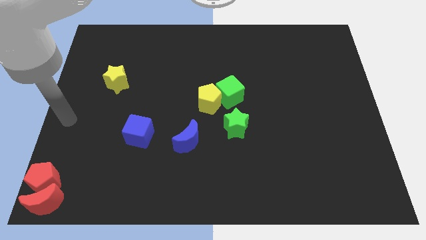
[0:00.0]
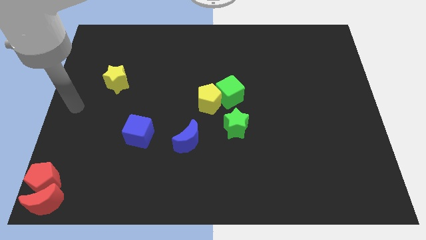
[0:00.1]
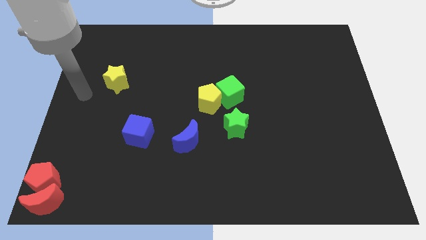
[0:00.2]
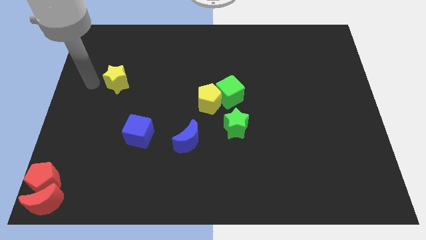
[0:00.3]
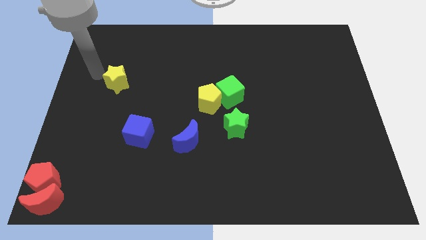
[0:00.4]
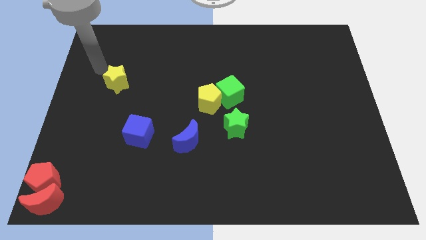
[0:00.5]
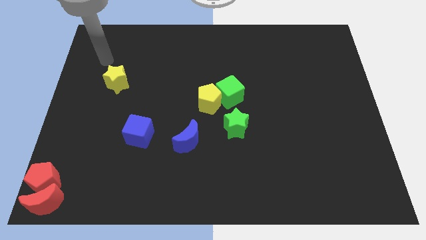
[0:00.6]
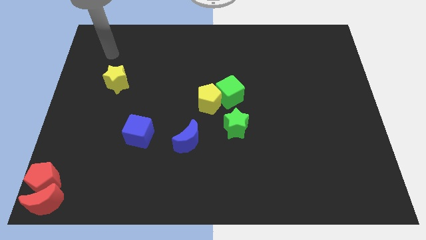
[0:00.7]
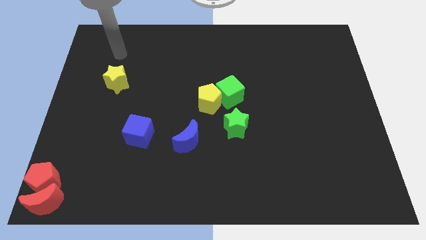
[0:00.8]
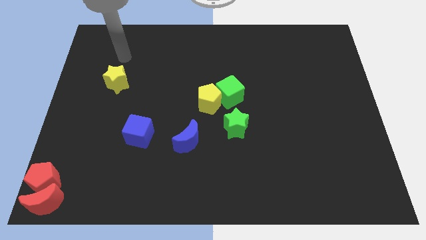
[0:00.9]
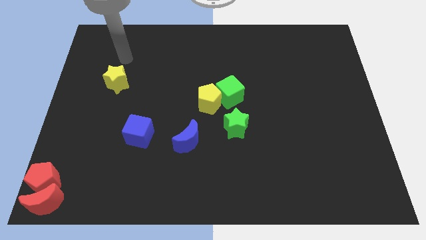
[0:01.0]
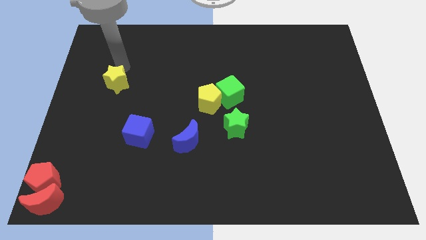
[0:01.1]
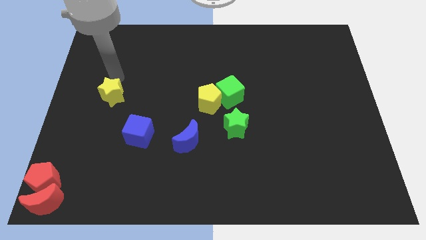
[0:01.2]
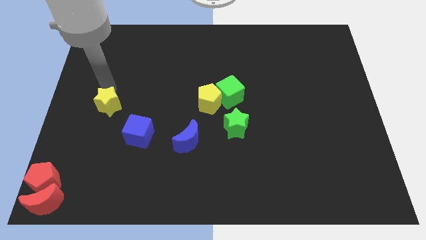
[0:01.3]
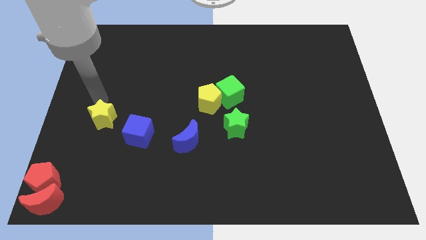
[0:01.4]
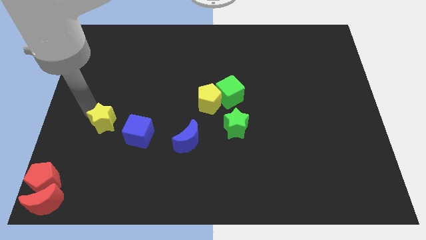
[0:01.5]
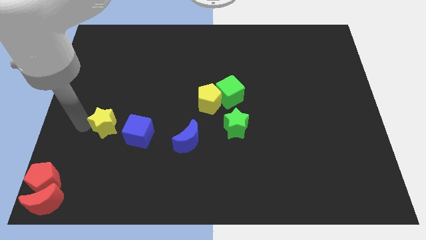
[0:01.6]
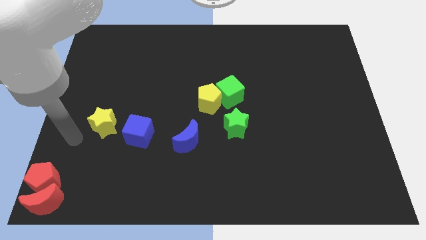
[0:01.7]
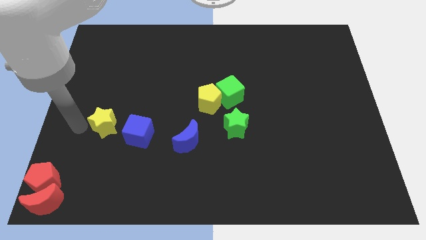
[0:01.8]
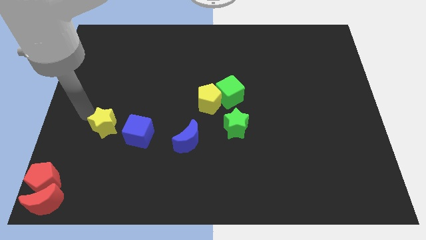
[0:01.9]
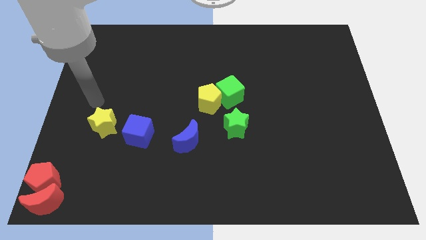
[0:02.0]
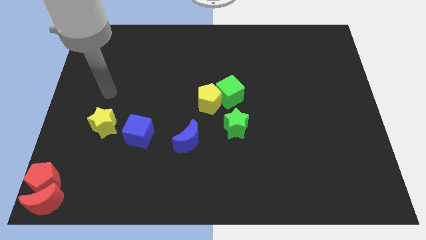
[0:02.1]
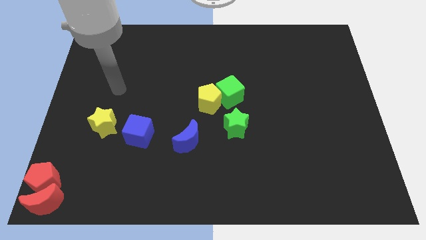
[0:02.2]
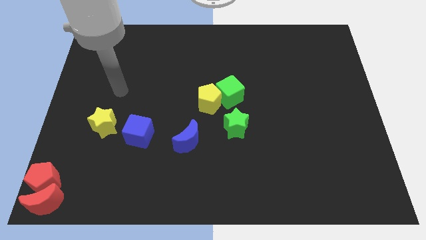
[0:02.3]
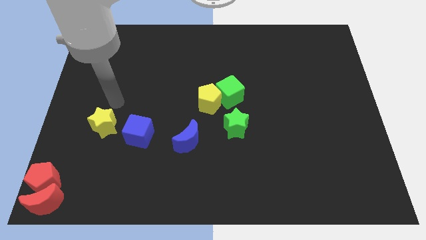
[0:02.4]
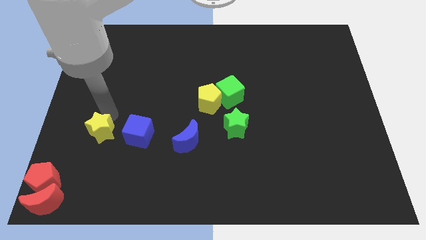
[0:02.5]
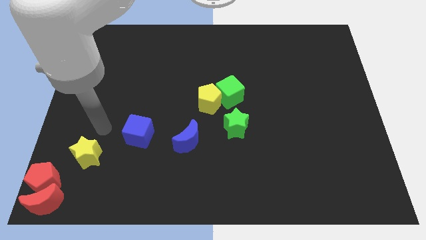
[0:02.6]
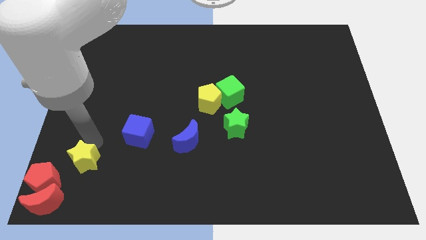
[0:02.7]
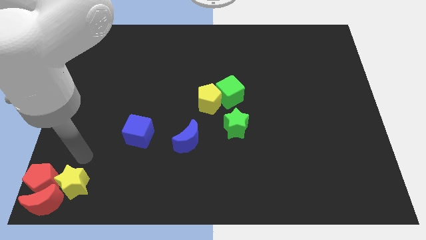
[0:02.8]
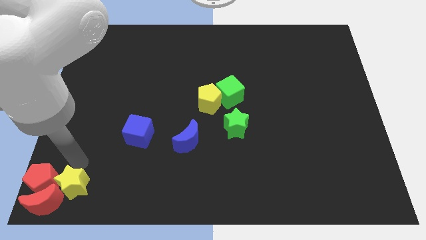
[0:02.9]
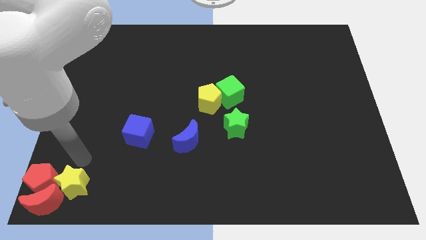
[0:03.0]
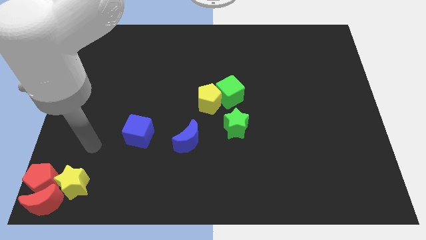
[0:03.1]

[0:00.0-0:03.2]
move the yellow star right to red pentagon

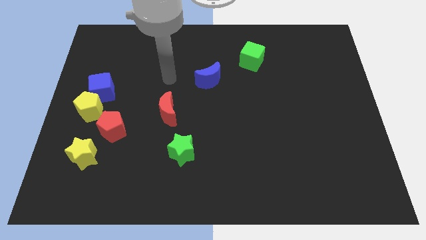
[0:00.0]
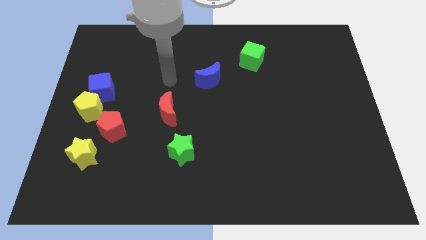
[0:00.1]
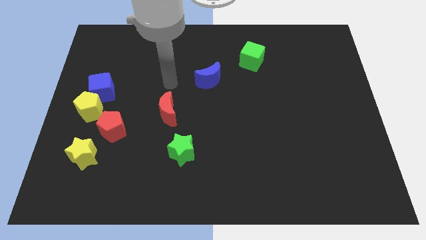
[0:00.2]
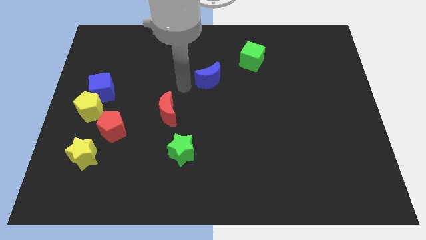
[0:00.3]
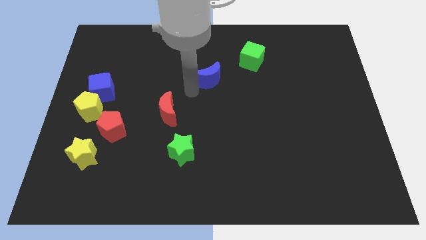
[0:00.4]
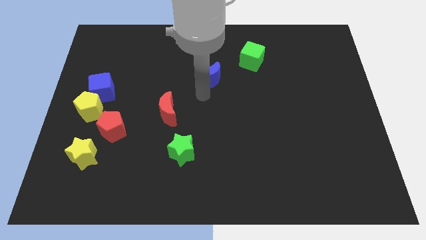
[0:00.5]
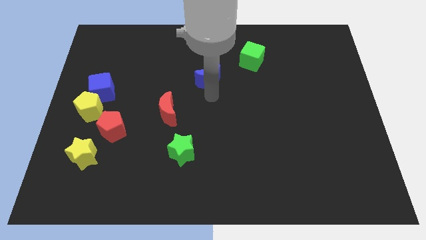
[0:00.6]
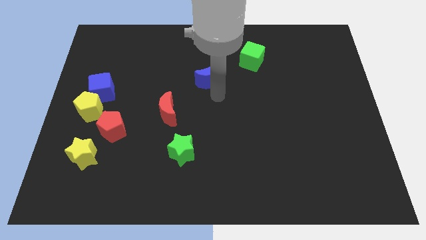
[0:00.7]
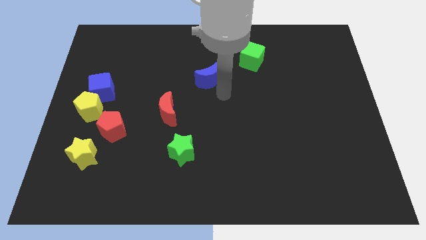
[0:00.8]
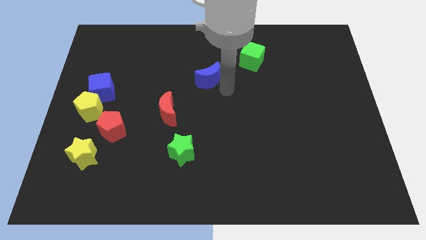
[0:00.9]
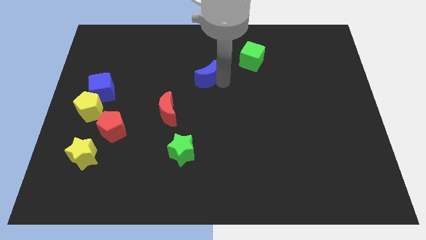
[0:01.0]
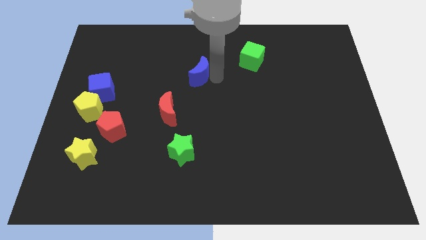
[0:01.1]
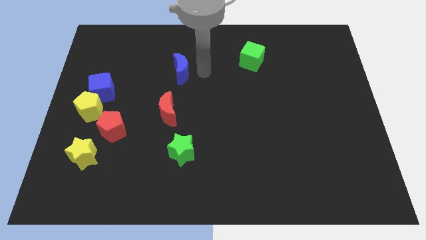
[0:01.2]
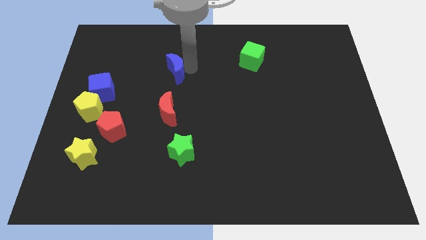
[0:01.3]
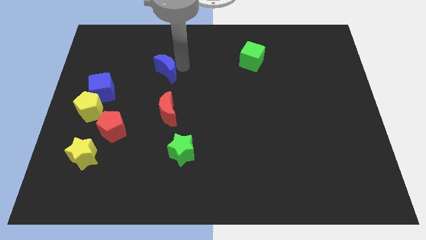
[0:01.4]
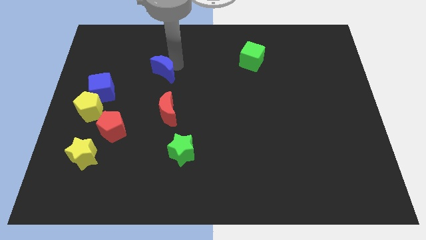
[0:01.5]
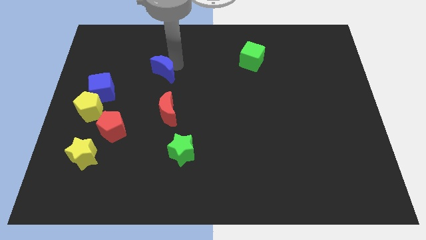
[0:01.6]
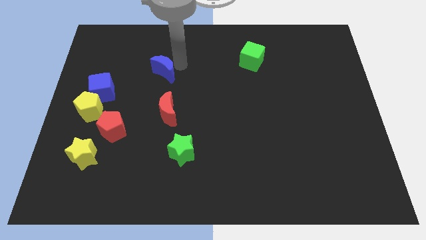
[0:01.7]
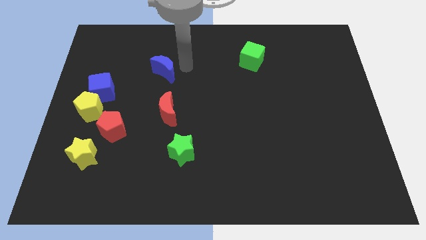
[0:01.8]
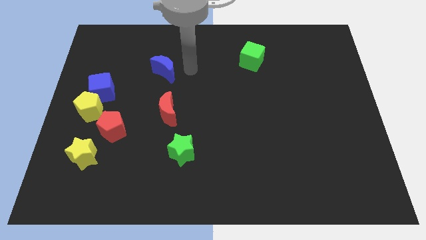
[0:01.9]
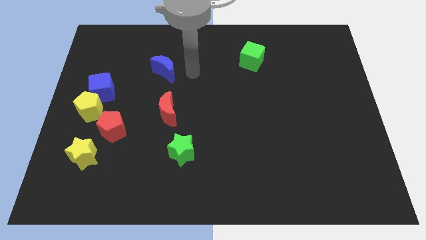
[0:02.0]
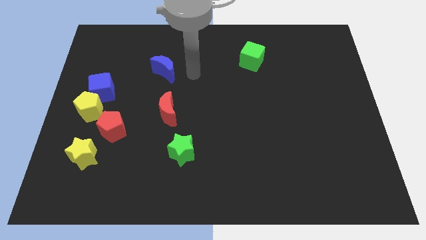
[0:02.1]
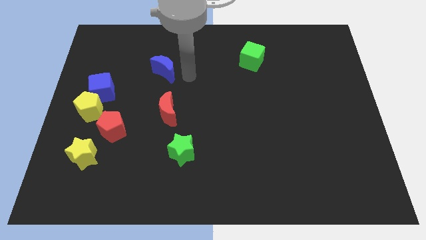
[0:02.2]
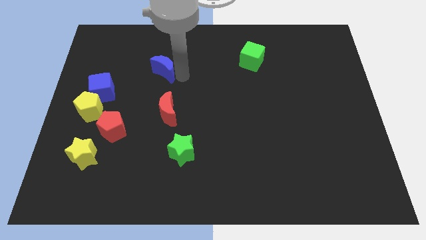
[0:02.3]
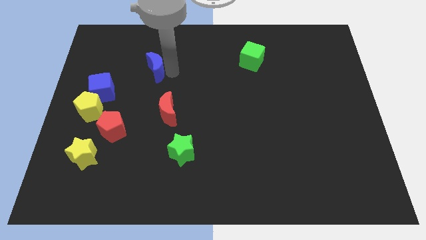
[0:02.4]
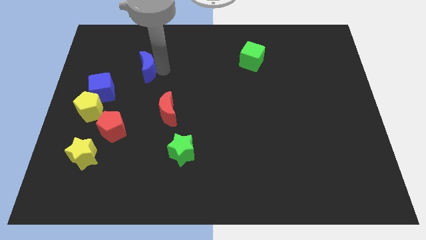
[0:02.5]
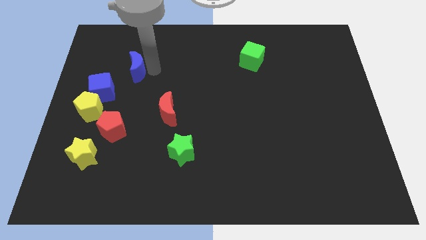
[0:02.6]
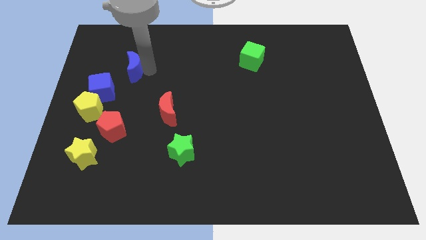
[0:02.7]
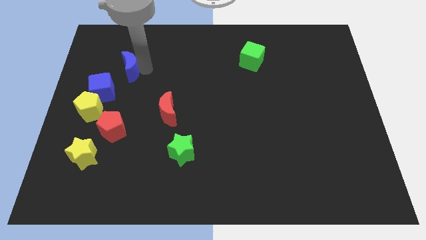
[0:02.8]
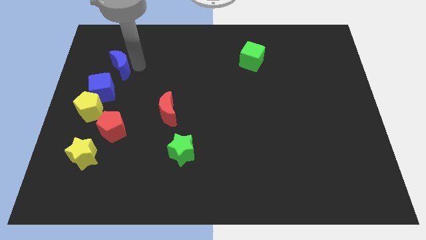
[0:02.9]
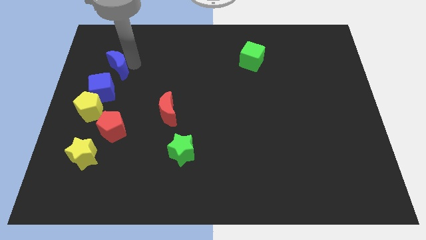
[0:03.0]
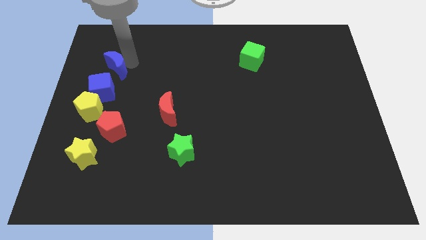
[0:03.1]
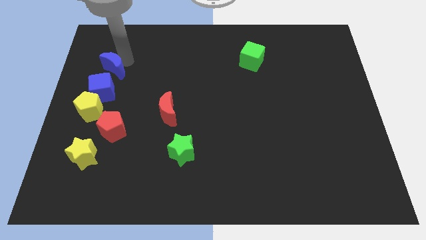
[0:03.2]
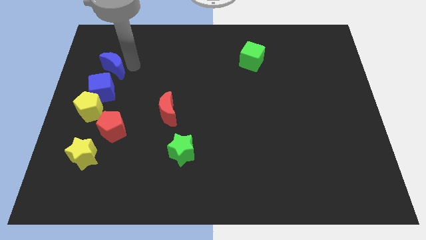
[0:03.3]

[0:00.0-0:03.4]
push the blue moon to the left side of the board

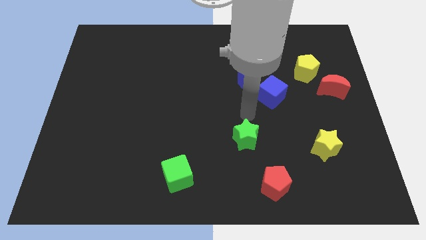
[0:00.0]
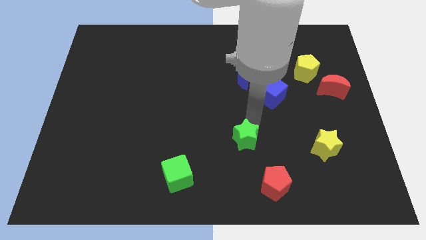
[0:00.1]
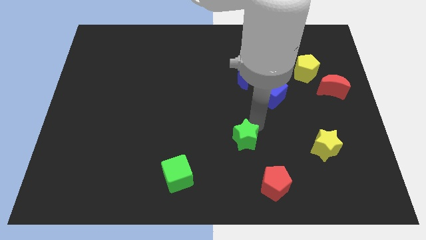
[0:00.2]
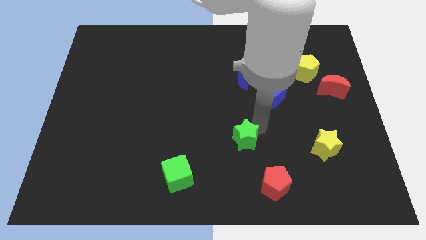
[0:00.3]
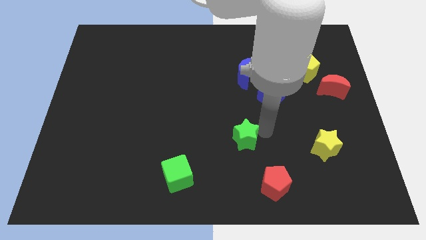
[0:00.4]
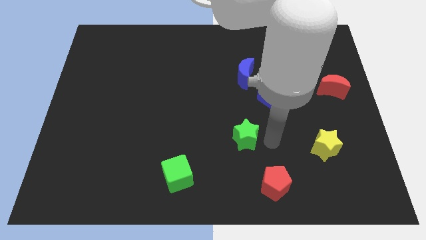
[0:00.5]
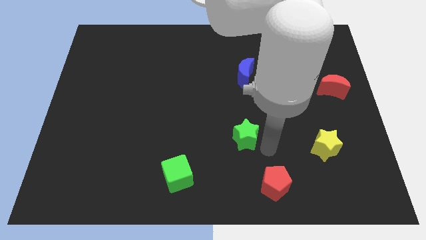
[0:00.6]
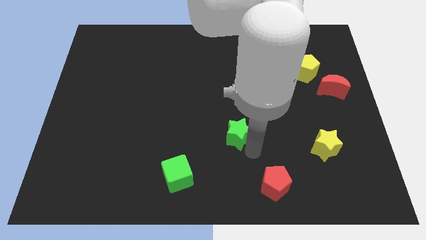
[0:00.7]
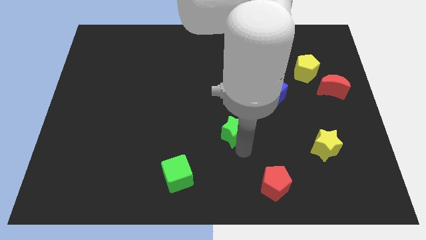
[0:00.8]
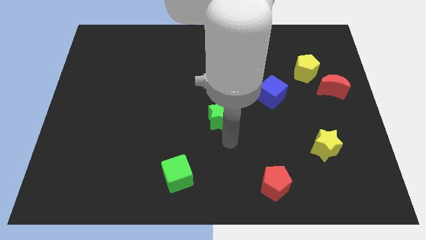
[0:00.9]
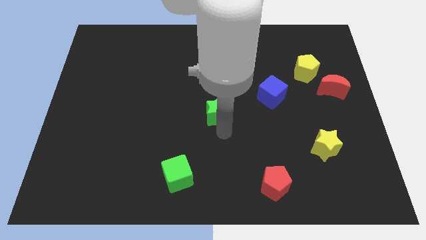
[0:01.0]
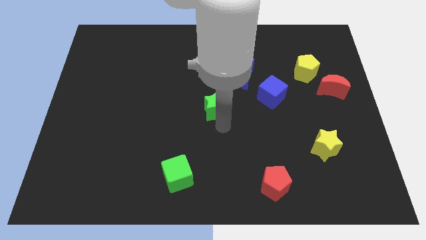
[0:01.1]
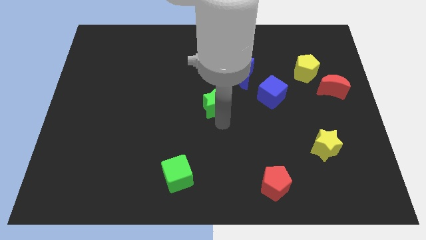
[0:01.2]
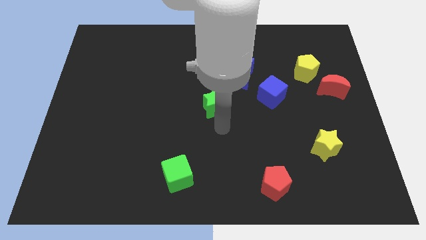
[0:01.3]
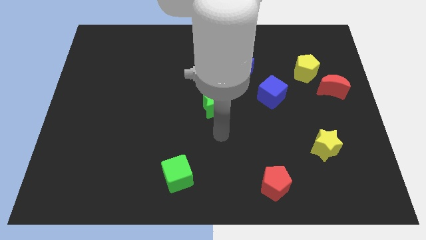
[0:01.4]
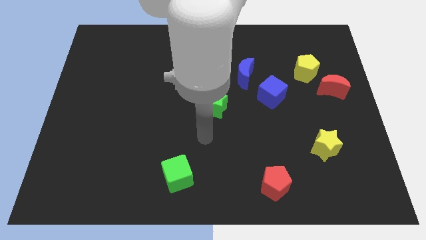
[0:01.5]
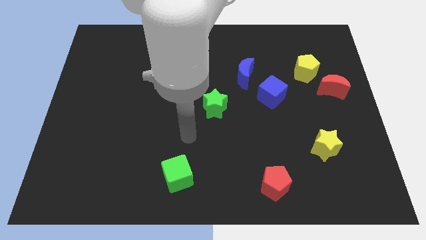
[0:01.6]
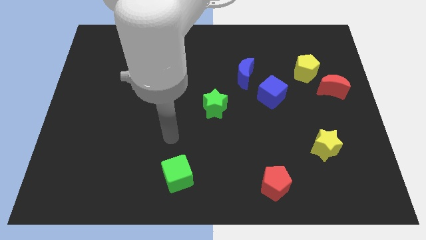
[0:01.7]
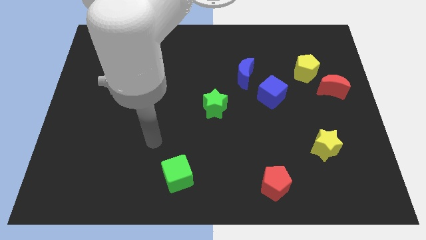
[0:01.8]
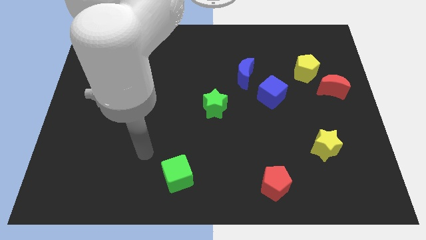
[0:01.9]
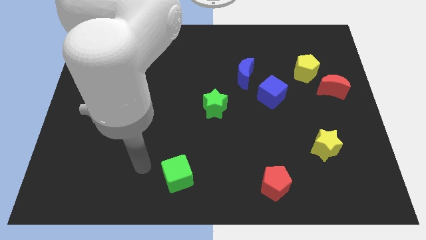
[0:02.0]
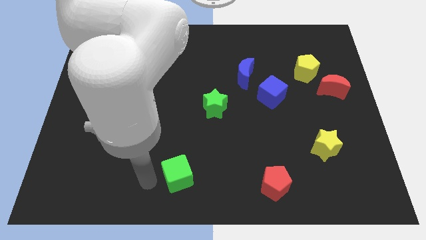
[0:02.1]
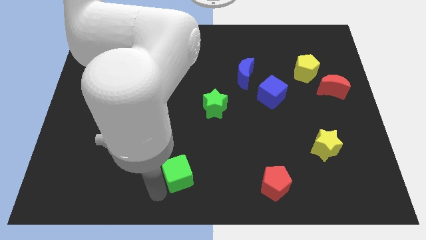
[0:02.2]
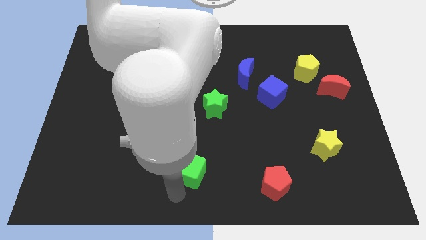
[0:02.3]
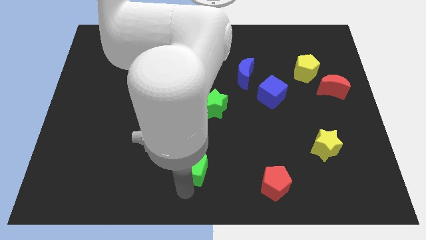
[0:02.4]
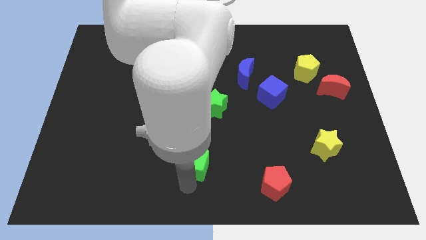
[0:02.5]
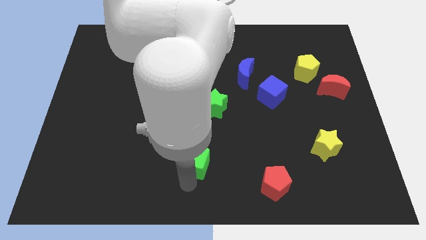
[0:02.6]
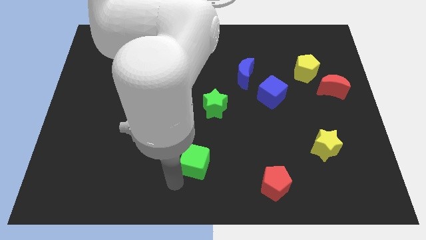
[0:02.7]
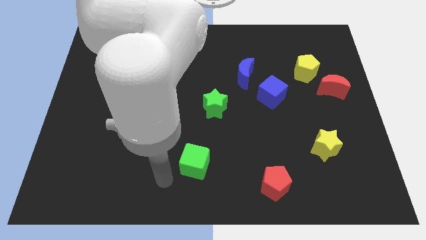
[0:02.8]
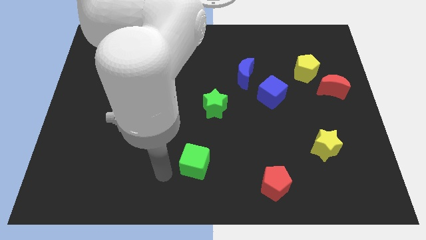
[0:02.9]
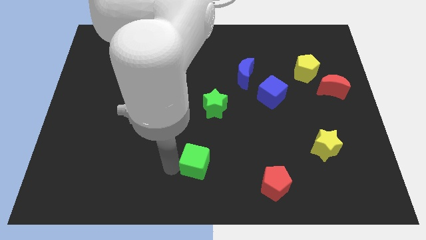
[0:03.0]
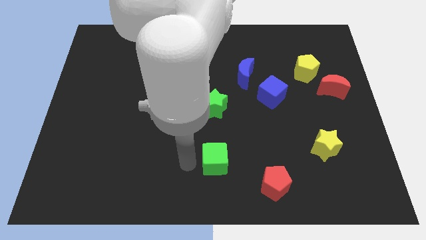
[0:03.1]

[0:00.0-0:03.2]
place the green cube below the green star
